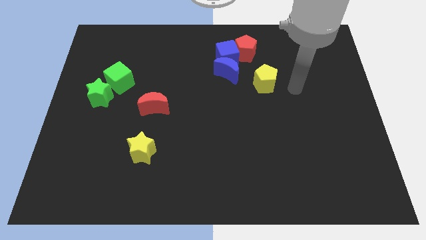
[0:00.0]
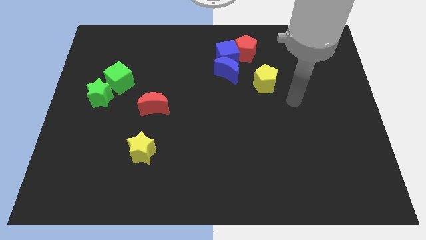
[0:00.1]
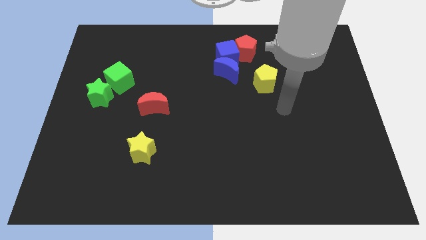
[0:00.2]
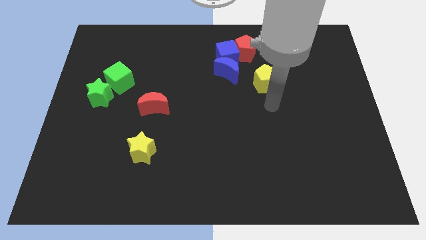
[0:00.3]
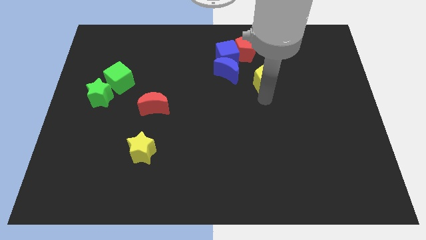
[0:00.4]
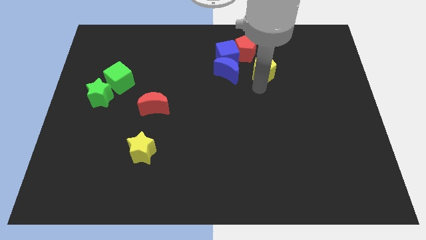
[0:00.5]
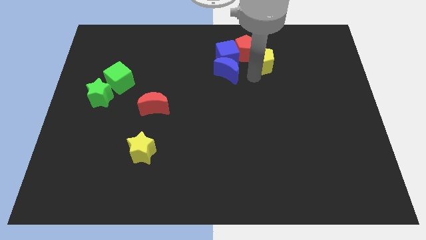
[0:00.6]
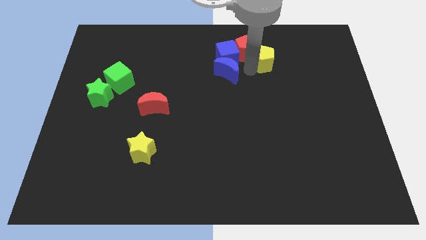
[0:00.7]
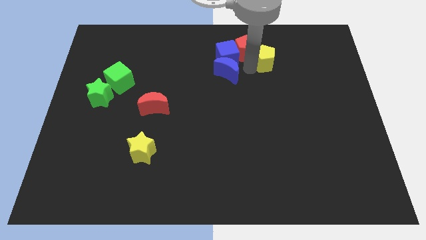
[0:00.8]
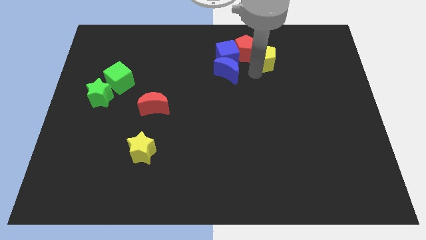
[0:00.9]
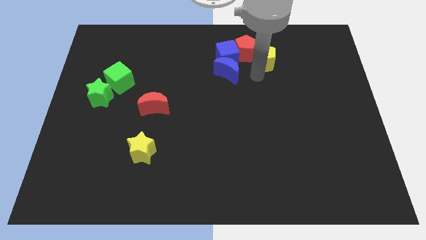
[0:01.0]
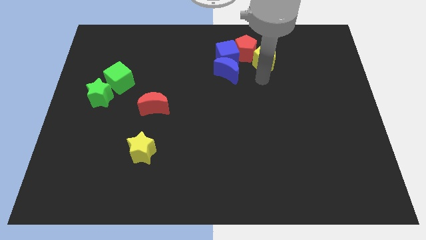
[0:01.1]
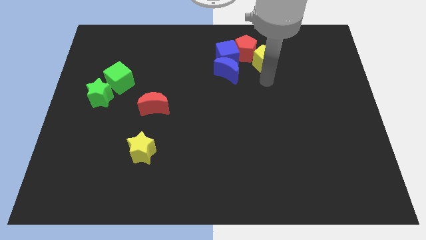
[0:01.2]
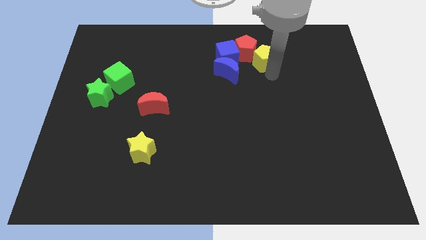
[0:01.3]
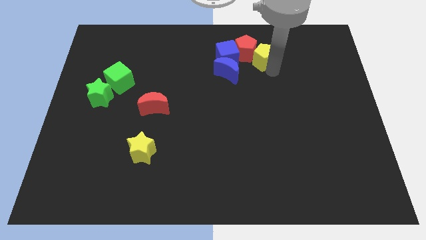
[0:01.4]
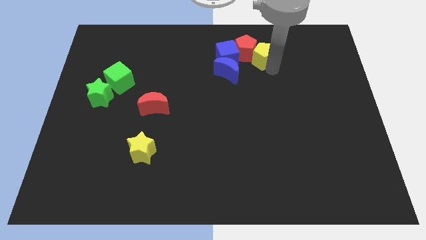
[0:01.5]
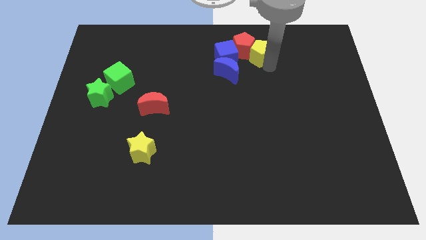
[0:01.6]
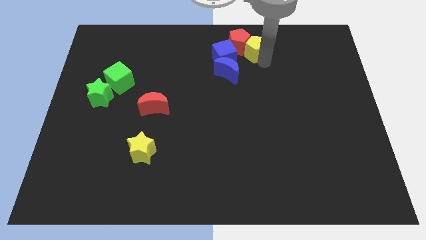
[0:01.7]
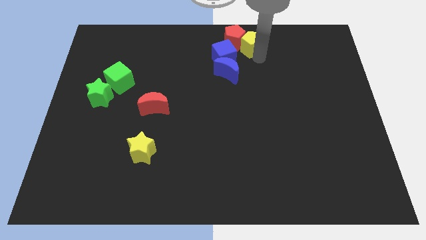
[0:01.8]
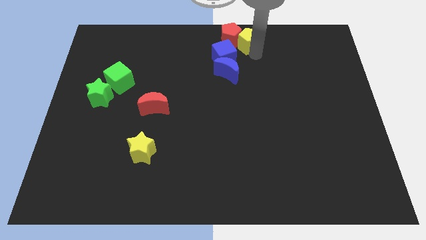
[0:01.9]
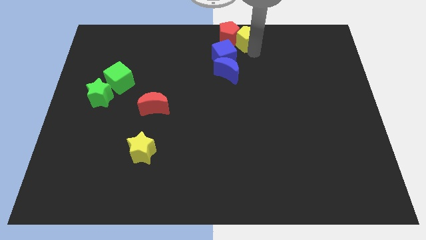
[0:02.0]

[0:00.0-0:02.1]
place yellow pentagon diagonal below into red pentagon

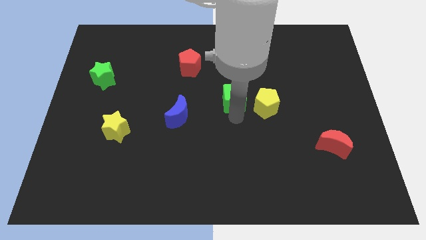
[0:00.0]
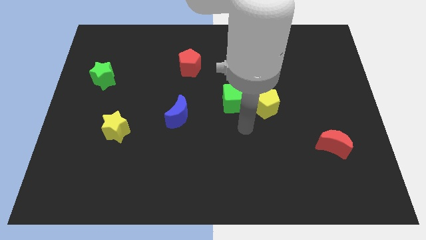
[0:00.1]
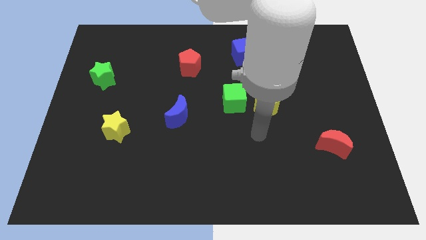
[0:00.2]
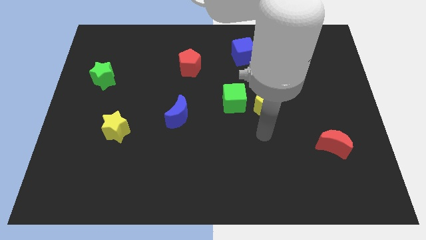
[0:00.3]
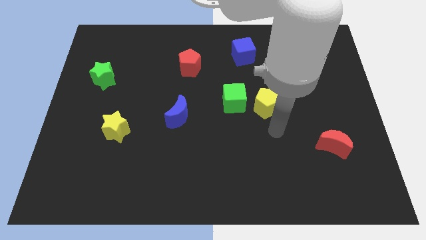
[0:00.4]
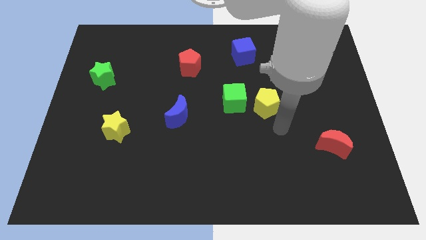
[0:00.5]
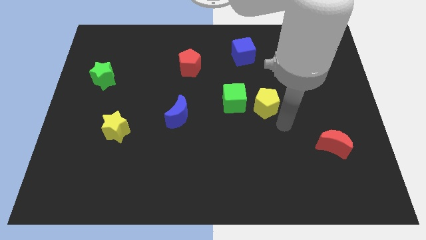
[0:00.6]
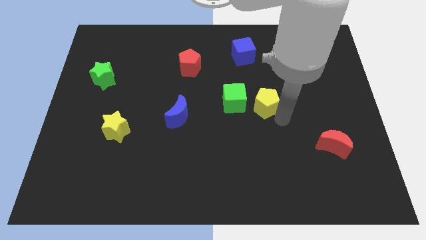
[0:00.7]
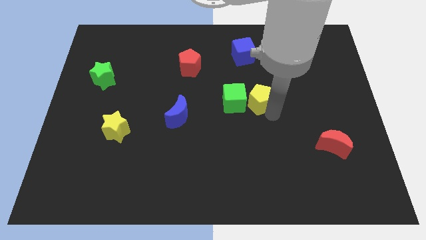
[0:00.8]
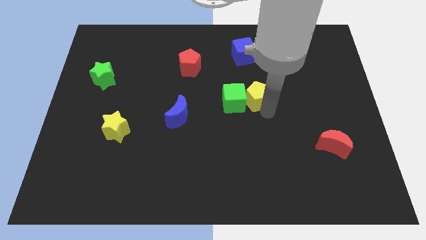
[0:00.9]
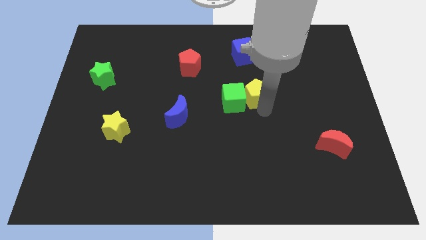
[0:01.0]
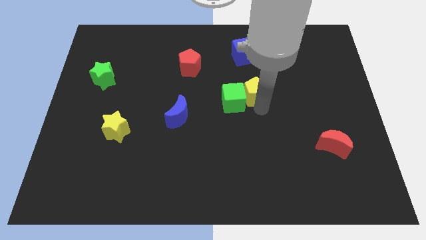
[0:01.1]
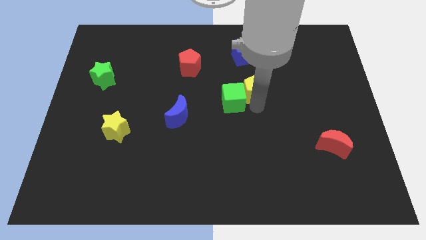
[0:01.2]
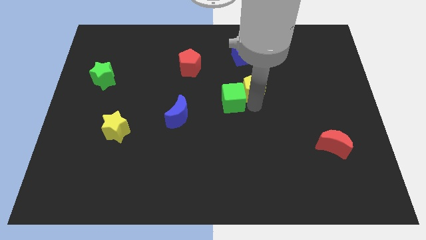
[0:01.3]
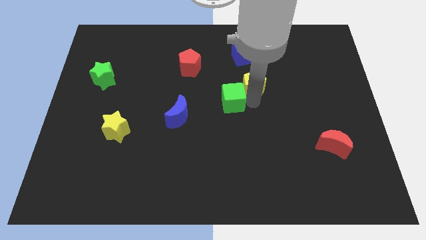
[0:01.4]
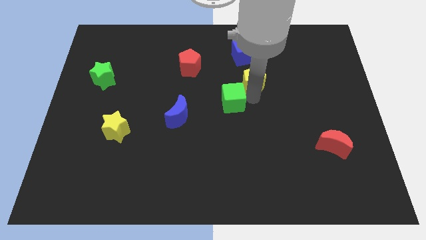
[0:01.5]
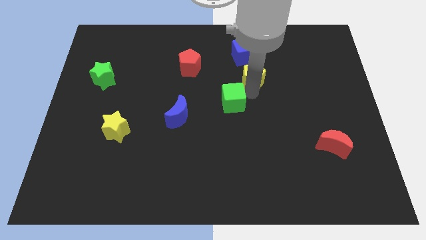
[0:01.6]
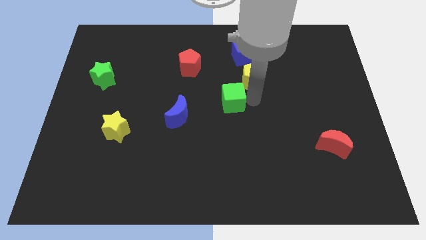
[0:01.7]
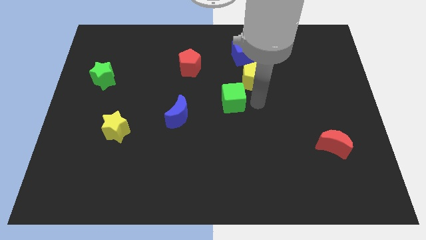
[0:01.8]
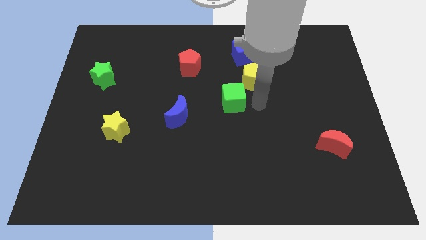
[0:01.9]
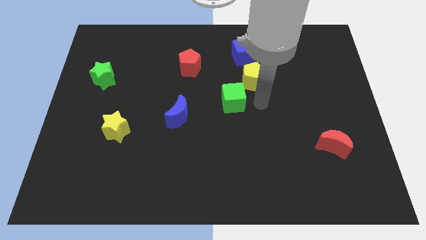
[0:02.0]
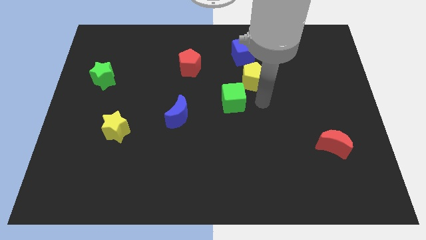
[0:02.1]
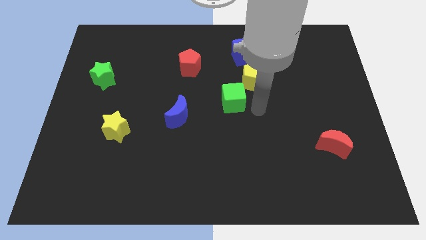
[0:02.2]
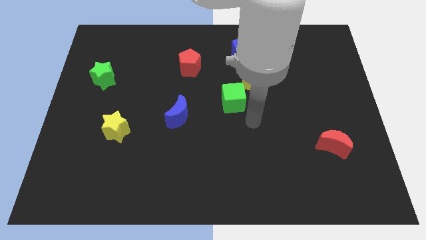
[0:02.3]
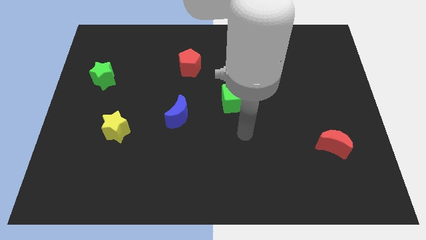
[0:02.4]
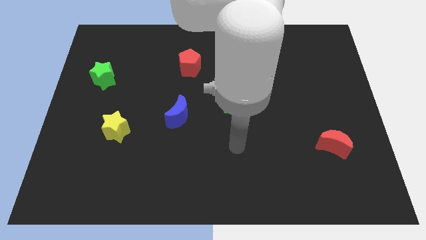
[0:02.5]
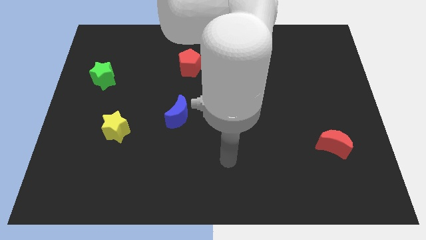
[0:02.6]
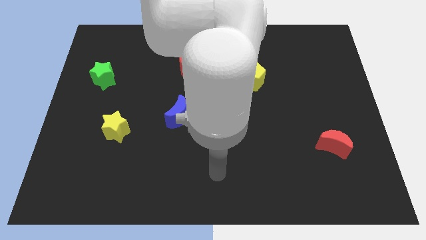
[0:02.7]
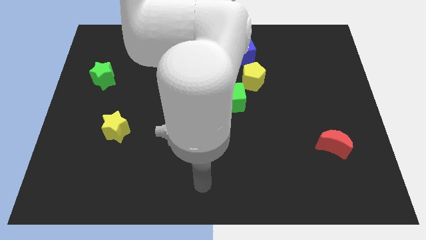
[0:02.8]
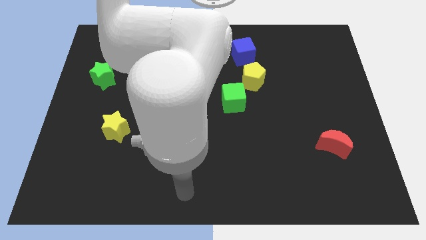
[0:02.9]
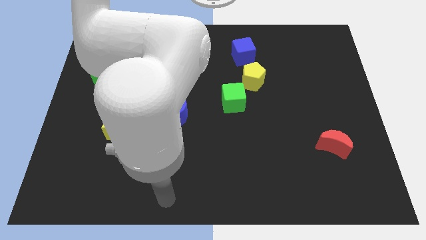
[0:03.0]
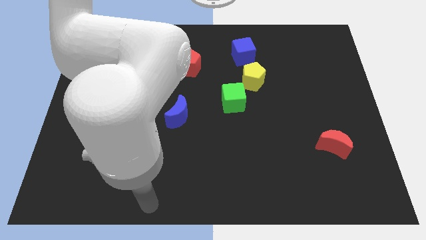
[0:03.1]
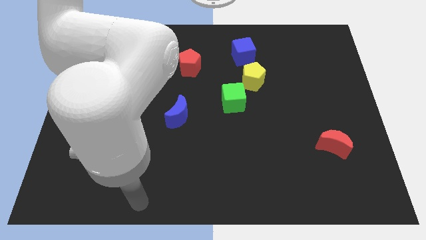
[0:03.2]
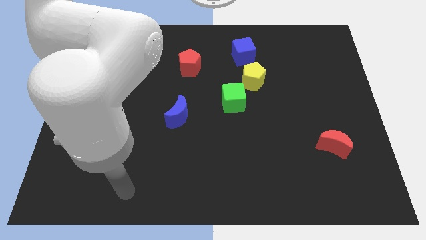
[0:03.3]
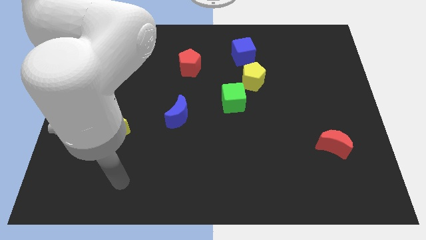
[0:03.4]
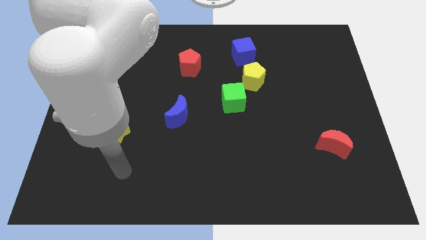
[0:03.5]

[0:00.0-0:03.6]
push the yellow pentagon below the blue cube

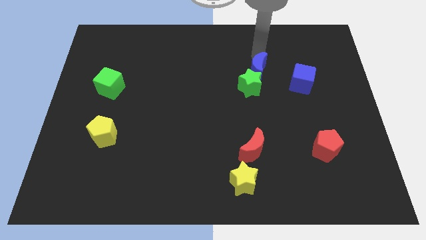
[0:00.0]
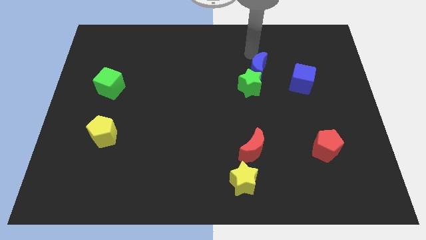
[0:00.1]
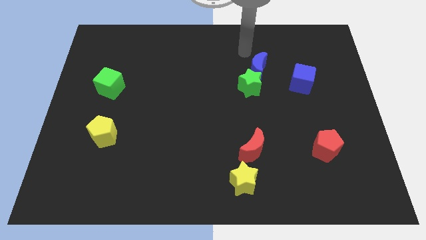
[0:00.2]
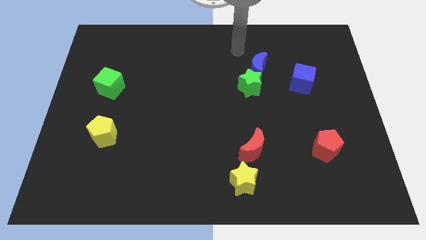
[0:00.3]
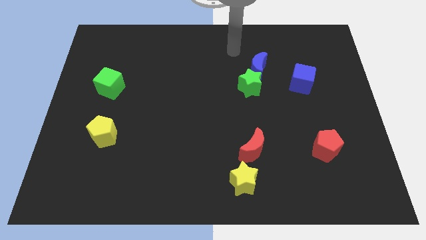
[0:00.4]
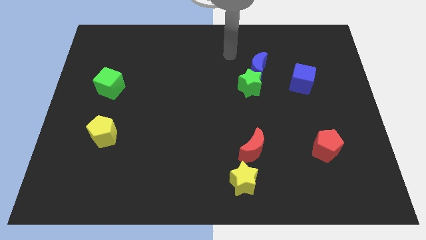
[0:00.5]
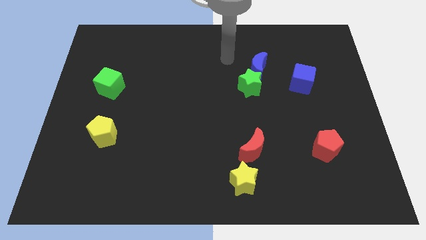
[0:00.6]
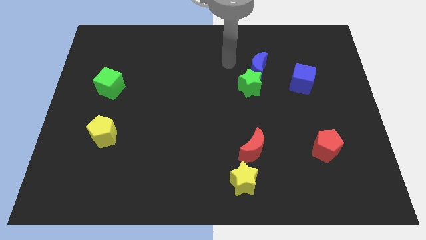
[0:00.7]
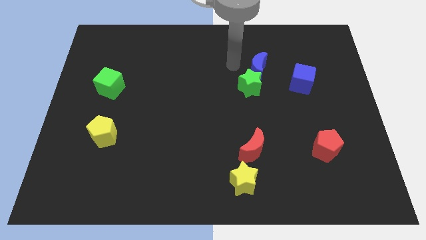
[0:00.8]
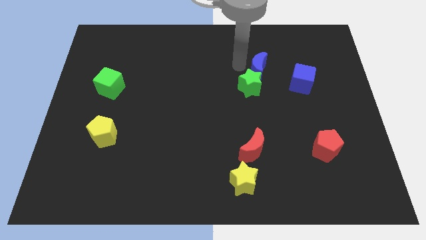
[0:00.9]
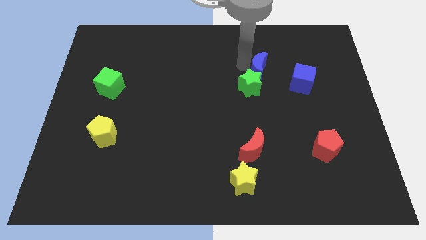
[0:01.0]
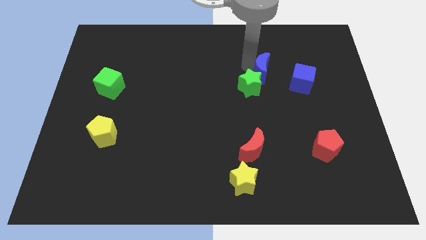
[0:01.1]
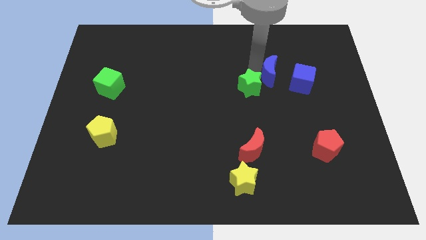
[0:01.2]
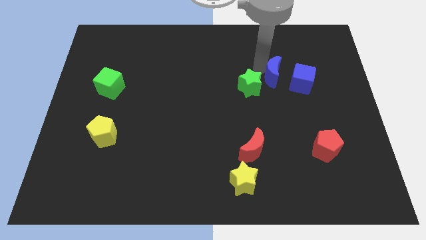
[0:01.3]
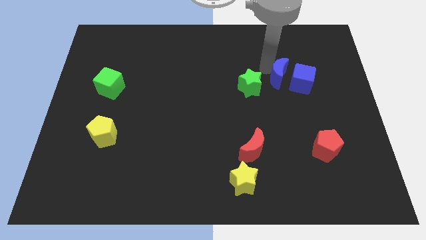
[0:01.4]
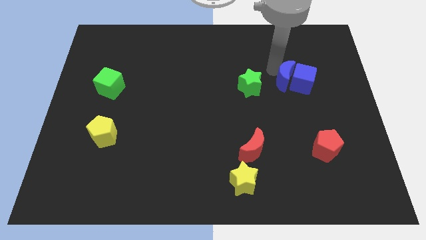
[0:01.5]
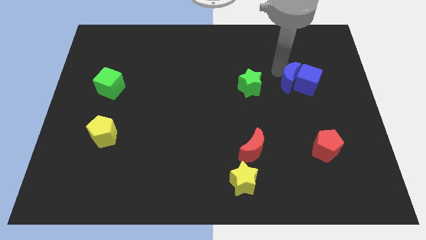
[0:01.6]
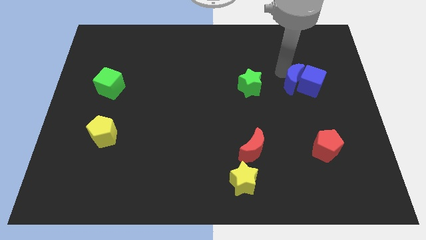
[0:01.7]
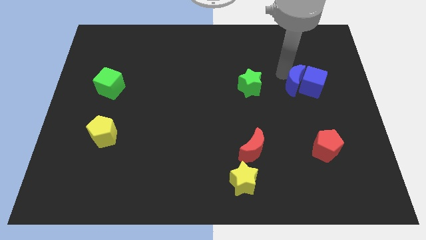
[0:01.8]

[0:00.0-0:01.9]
move the blue crescent into the blue cube

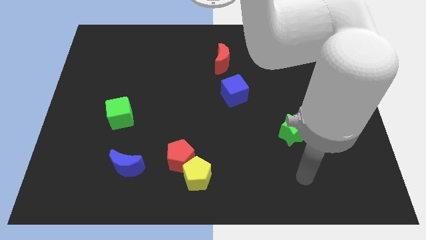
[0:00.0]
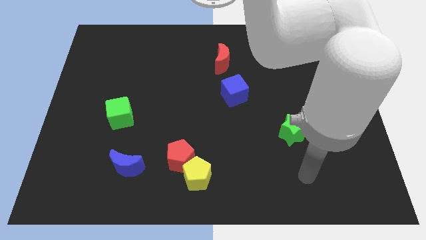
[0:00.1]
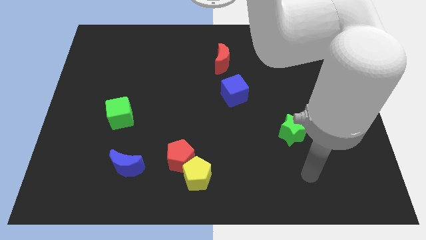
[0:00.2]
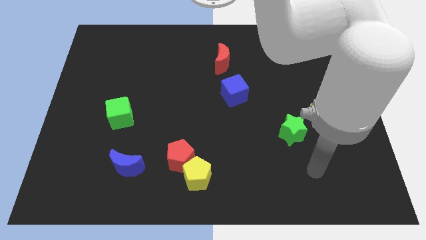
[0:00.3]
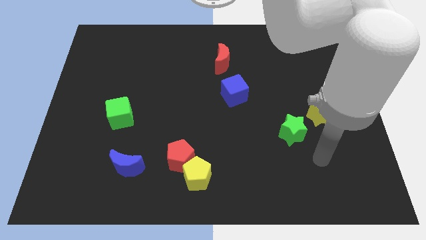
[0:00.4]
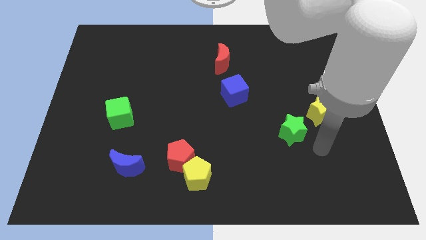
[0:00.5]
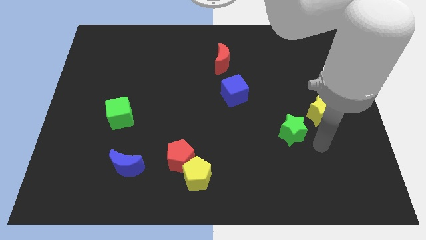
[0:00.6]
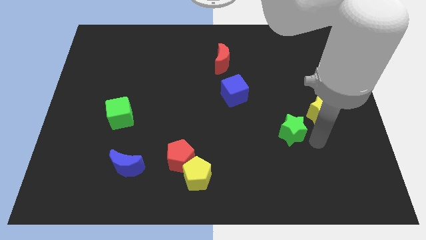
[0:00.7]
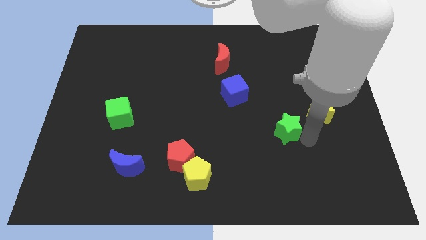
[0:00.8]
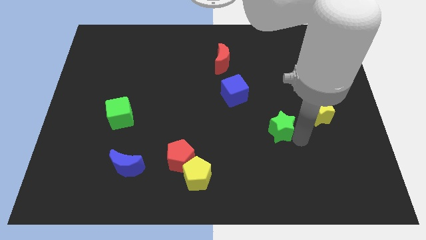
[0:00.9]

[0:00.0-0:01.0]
place your arm right to green star

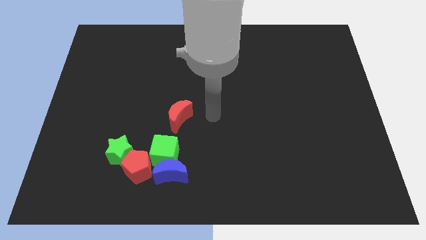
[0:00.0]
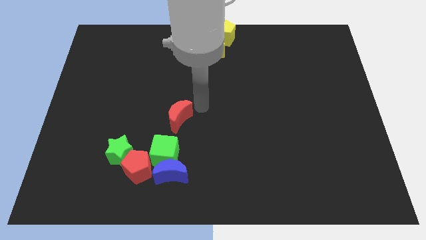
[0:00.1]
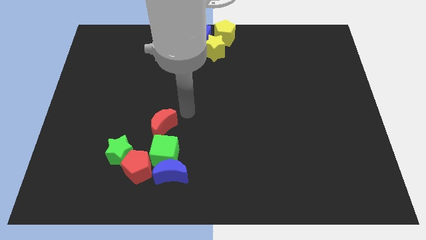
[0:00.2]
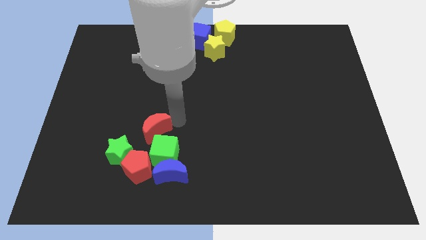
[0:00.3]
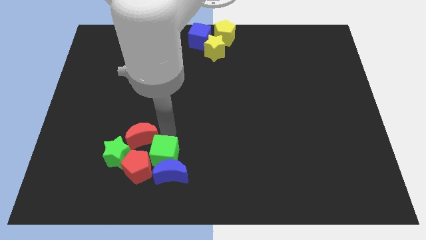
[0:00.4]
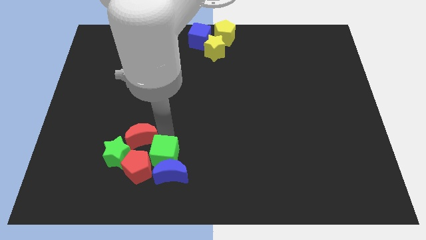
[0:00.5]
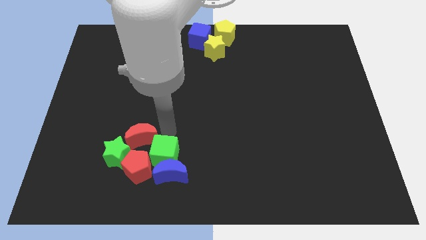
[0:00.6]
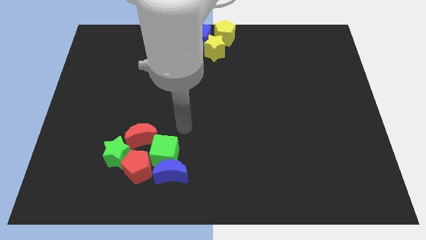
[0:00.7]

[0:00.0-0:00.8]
place red crescent above red pentagon
